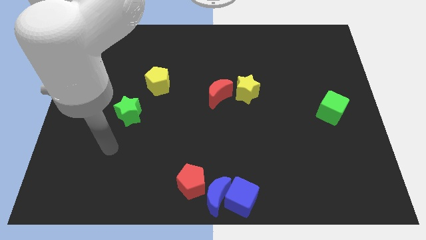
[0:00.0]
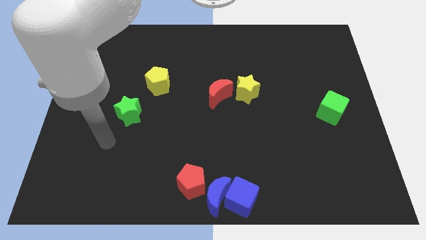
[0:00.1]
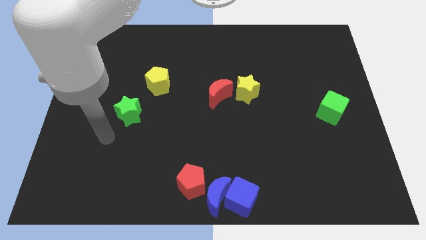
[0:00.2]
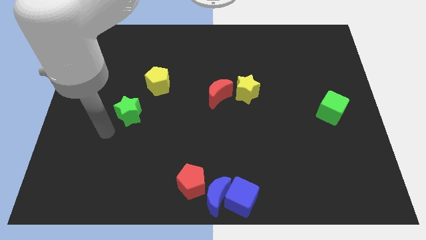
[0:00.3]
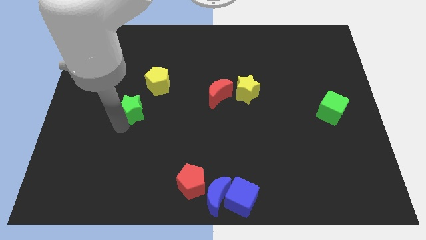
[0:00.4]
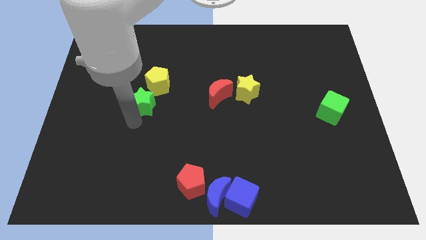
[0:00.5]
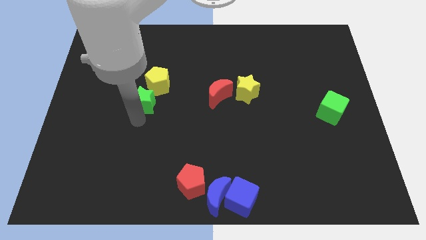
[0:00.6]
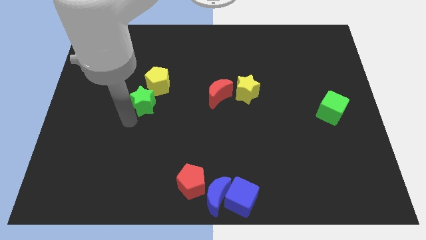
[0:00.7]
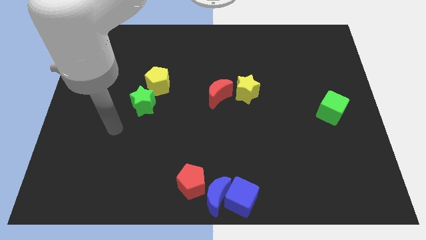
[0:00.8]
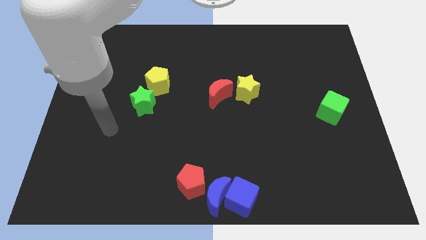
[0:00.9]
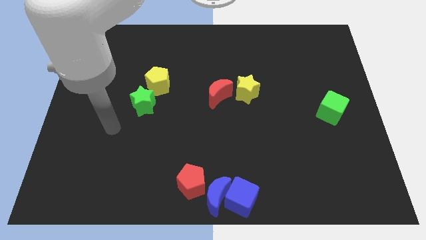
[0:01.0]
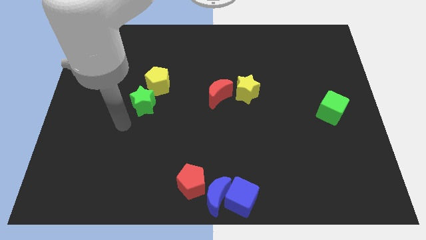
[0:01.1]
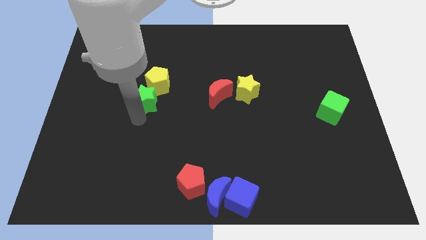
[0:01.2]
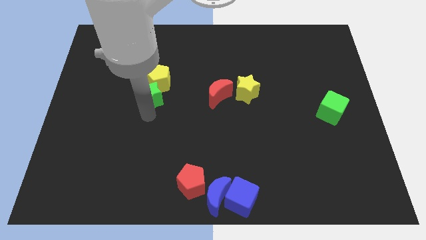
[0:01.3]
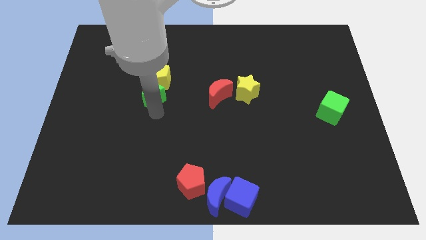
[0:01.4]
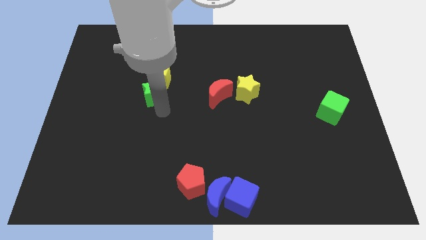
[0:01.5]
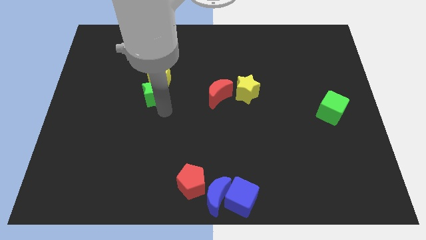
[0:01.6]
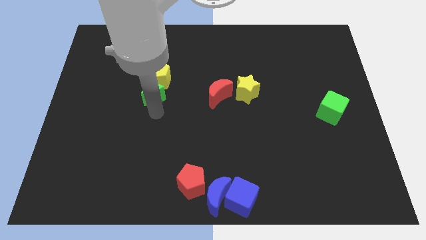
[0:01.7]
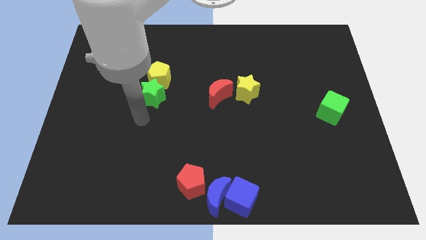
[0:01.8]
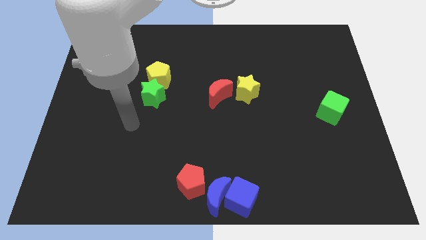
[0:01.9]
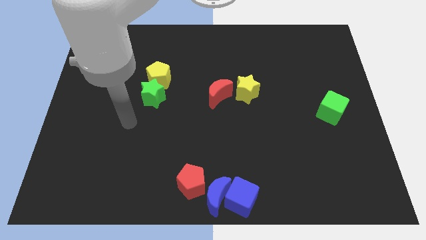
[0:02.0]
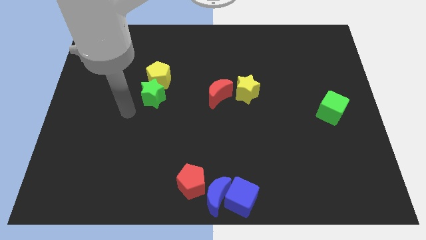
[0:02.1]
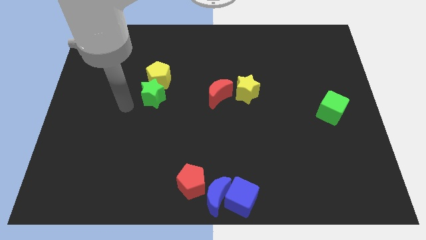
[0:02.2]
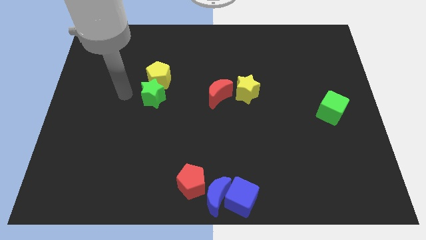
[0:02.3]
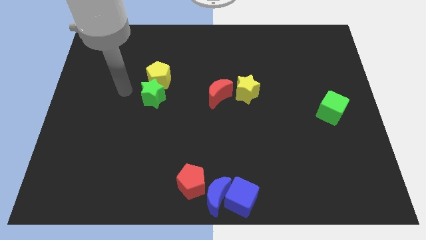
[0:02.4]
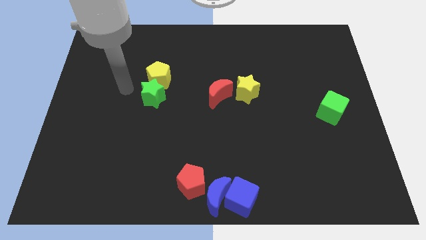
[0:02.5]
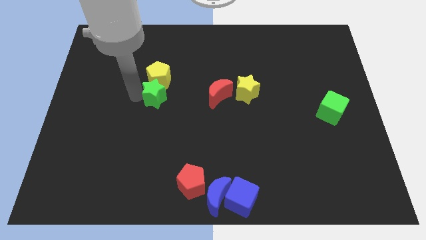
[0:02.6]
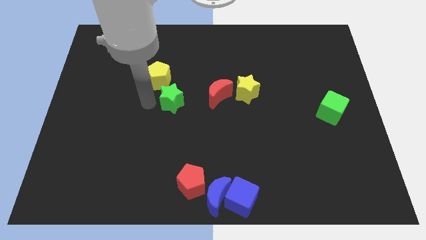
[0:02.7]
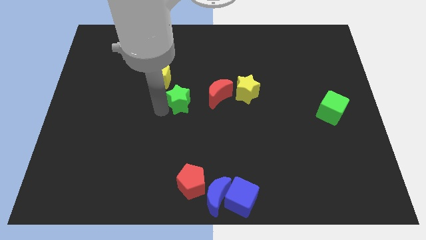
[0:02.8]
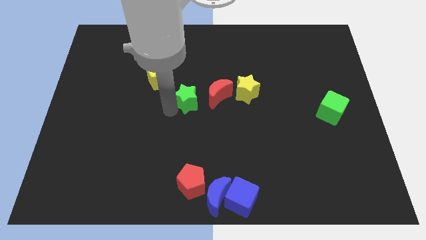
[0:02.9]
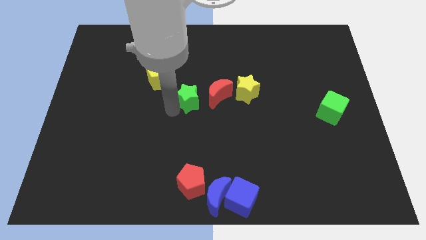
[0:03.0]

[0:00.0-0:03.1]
move green star to the left of red moon

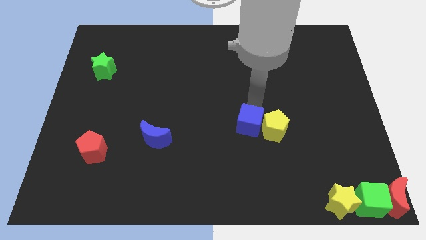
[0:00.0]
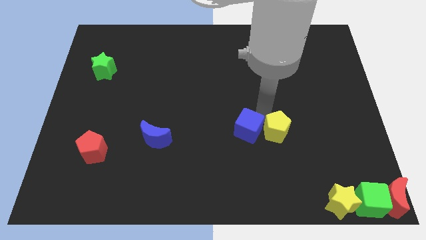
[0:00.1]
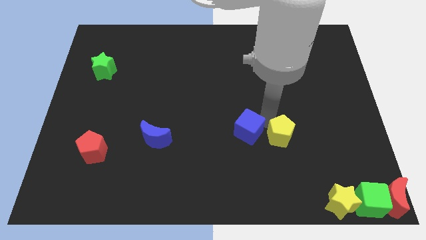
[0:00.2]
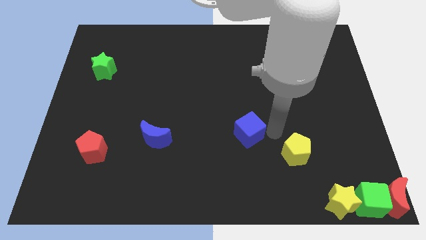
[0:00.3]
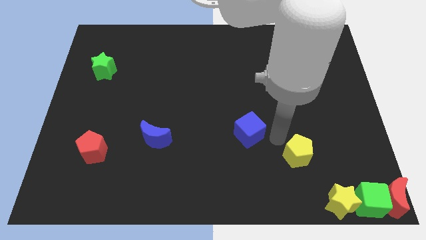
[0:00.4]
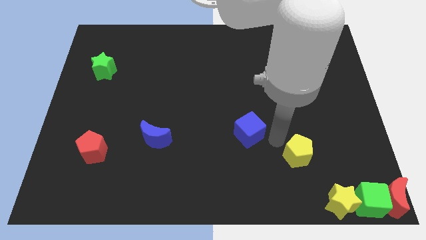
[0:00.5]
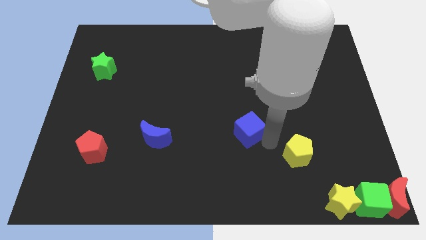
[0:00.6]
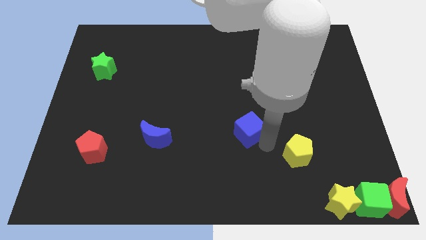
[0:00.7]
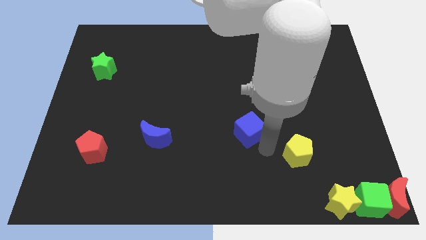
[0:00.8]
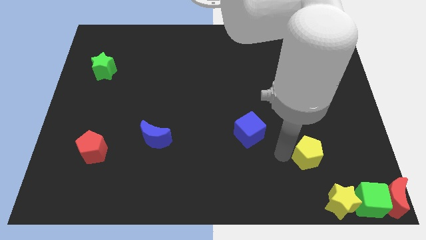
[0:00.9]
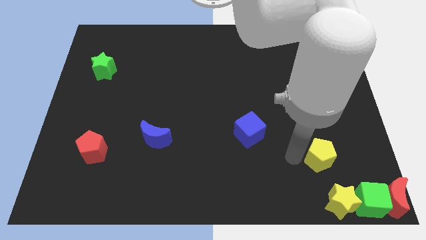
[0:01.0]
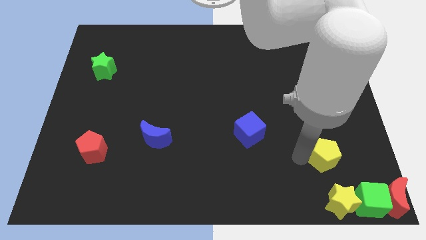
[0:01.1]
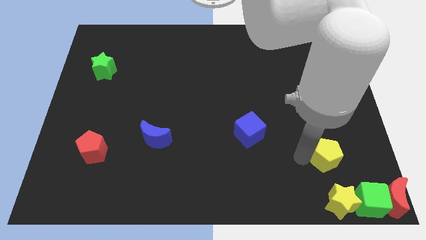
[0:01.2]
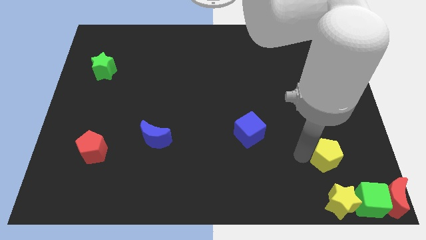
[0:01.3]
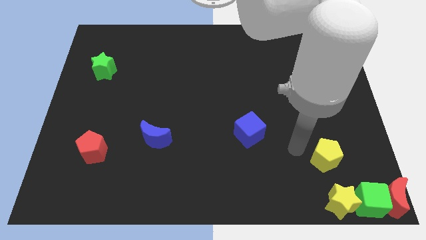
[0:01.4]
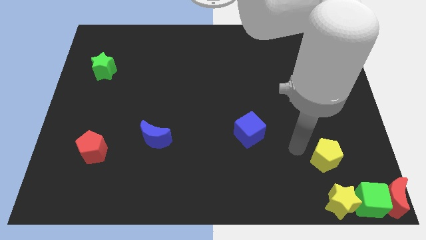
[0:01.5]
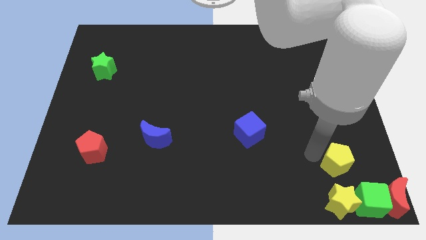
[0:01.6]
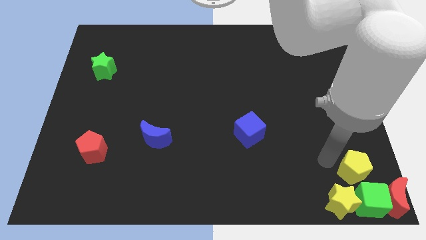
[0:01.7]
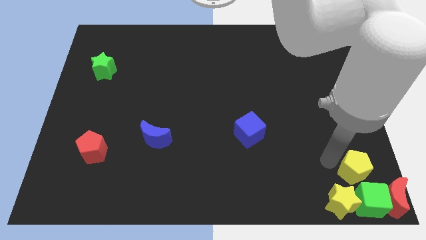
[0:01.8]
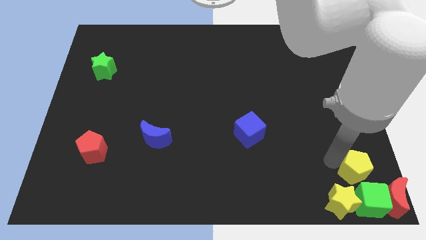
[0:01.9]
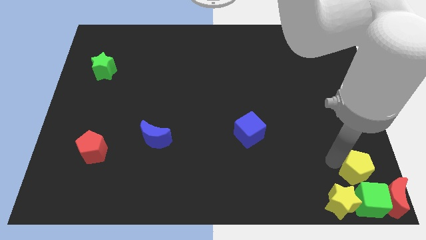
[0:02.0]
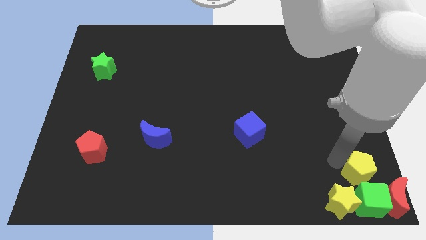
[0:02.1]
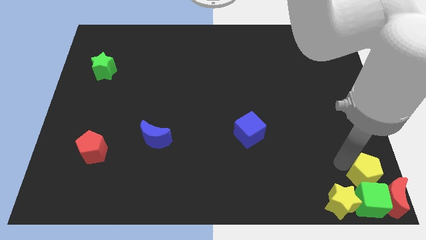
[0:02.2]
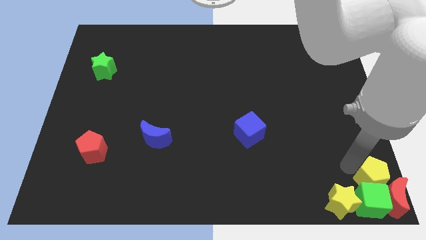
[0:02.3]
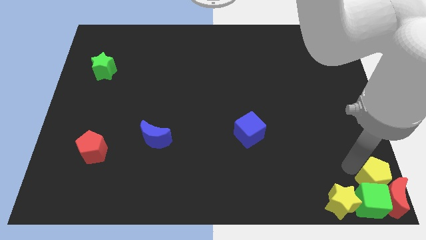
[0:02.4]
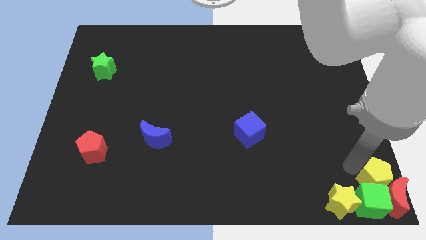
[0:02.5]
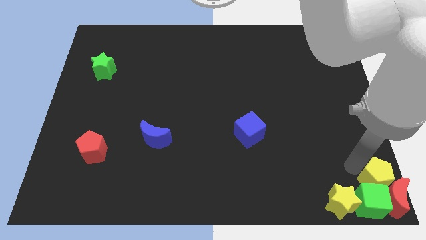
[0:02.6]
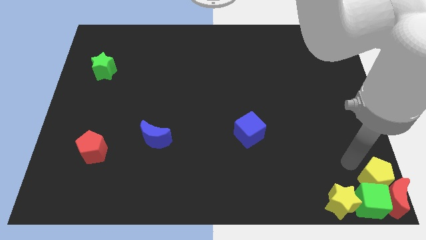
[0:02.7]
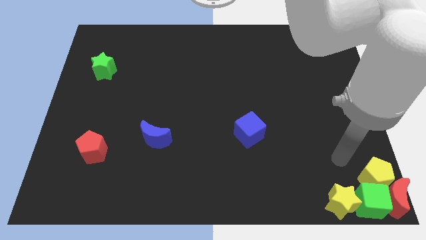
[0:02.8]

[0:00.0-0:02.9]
push the yellow pentagon into the group of blocks

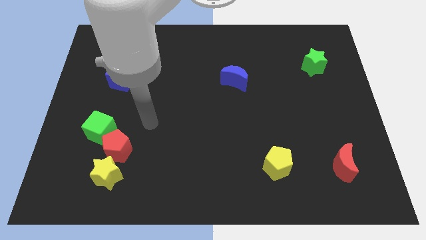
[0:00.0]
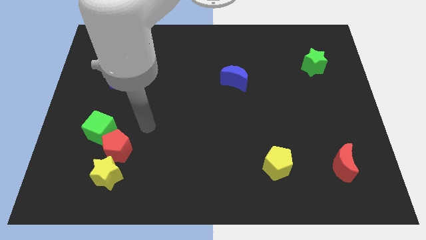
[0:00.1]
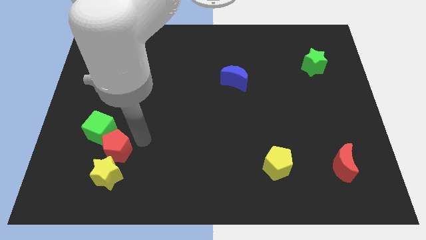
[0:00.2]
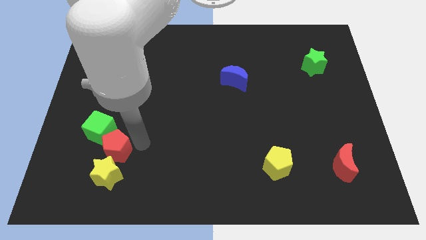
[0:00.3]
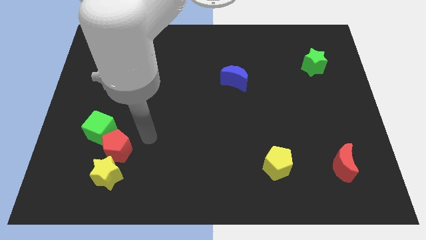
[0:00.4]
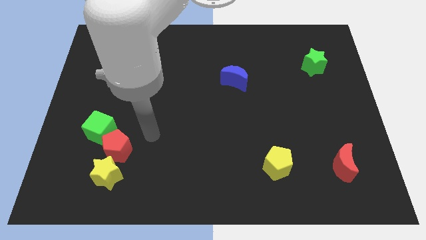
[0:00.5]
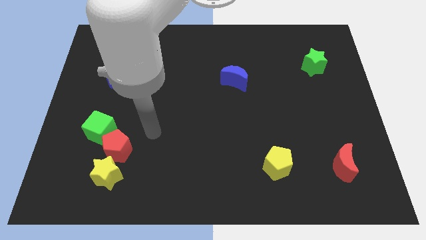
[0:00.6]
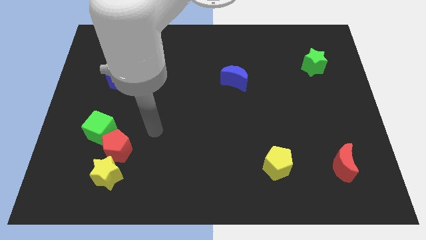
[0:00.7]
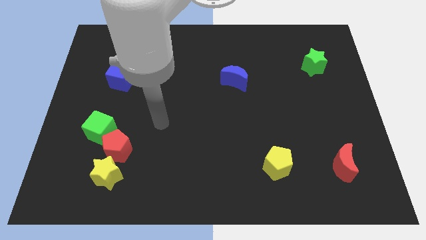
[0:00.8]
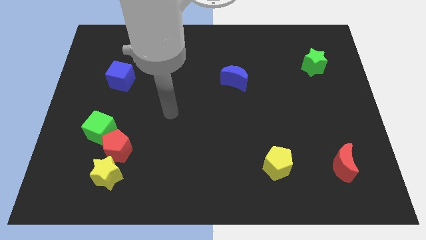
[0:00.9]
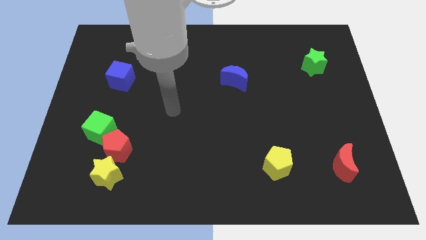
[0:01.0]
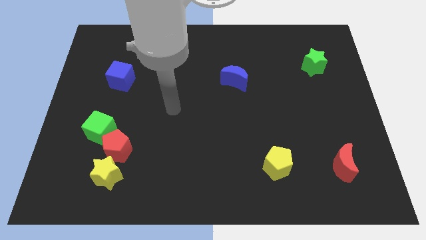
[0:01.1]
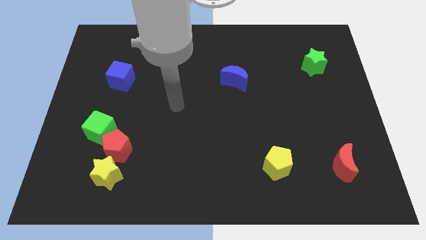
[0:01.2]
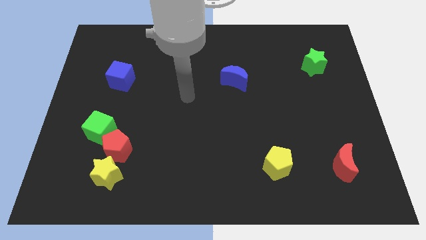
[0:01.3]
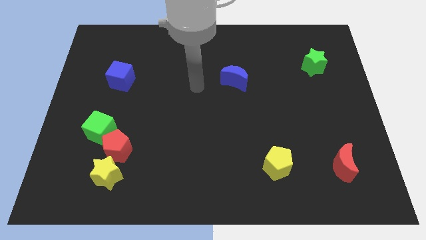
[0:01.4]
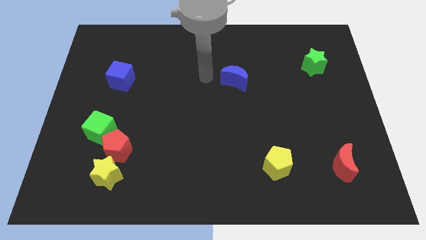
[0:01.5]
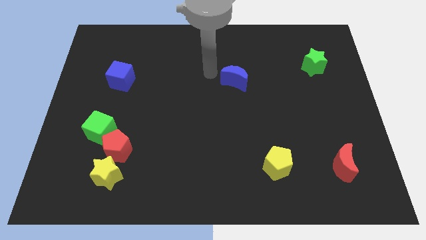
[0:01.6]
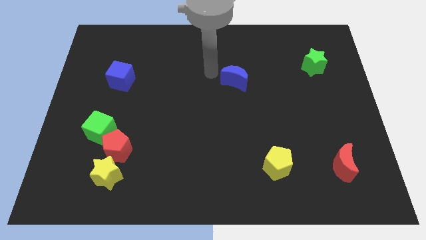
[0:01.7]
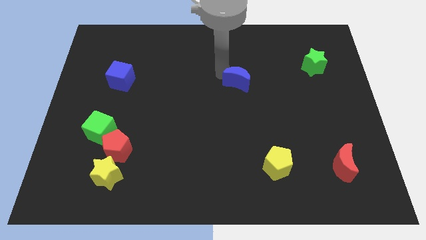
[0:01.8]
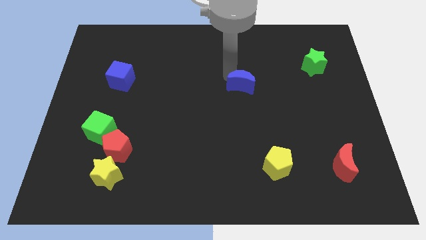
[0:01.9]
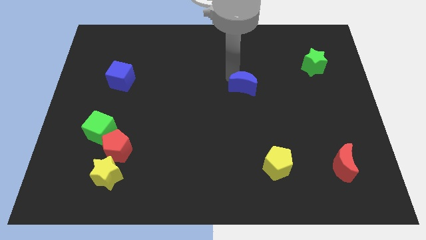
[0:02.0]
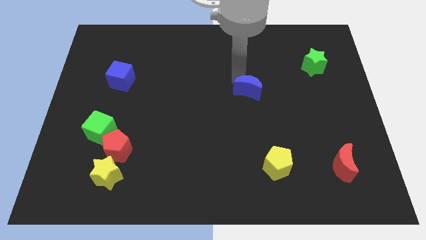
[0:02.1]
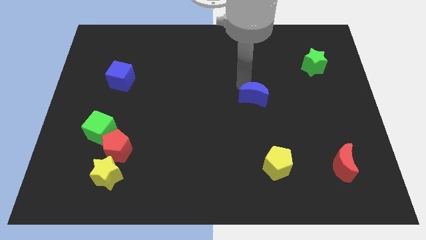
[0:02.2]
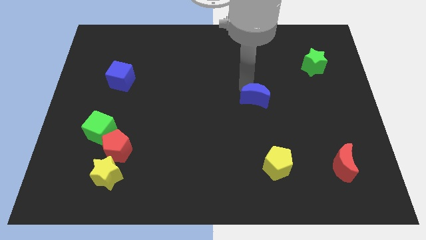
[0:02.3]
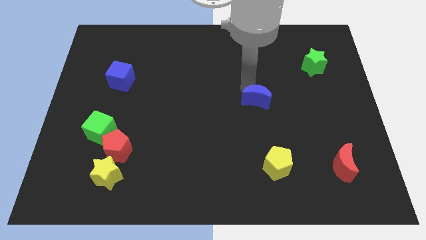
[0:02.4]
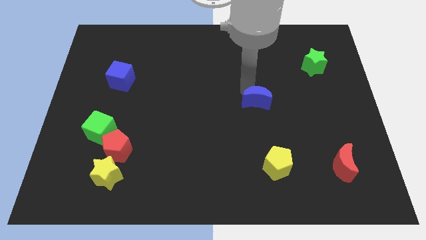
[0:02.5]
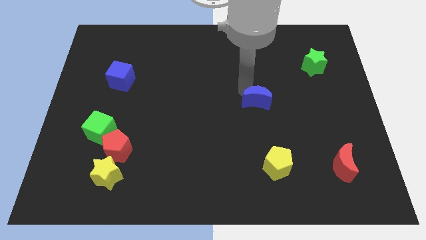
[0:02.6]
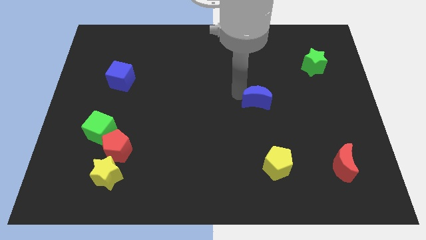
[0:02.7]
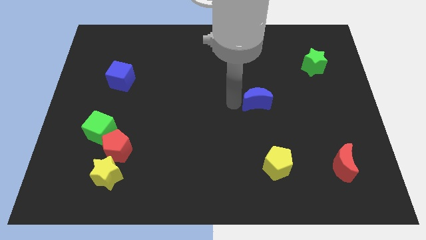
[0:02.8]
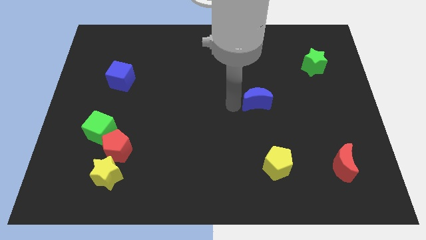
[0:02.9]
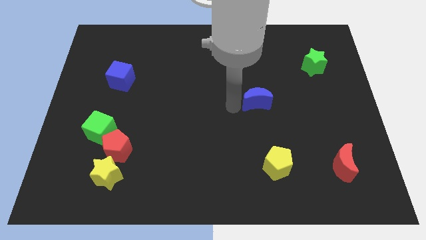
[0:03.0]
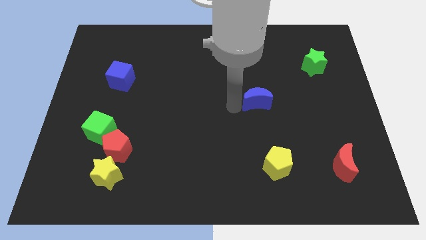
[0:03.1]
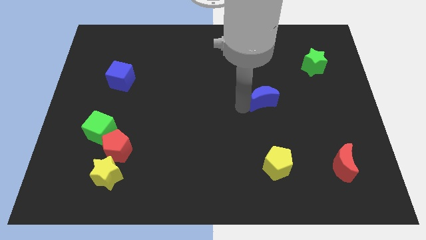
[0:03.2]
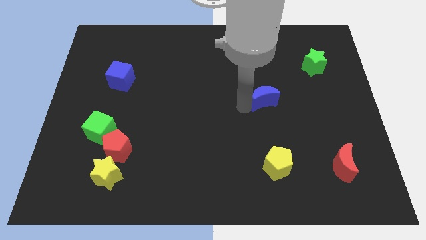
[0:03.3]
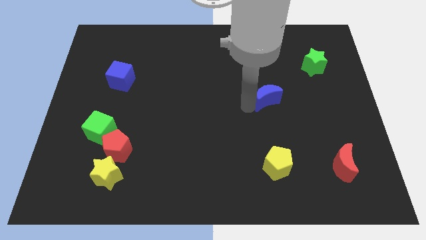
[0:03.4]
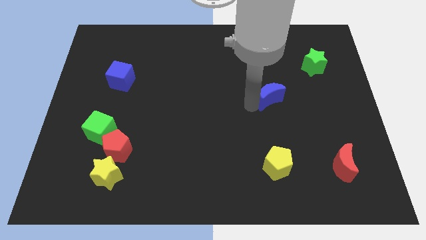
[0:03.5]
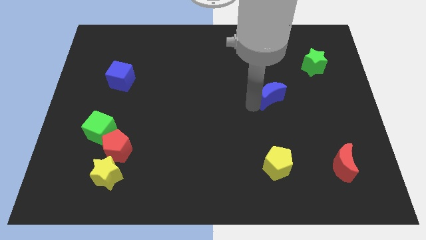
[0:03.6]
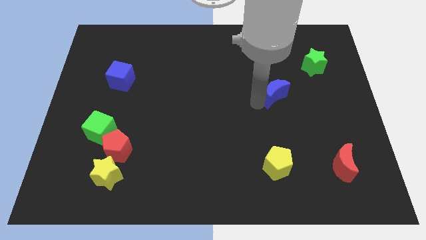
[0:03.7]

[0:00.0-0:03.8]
move the blue crescent vertically above the top side of the yellow pentagon
